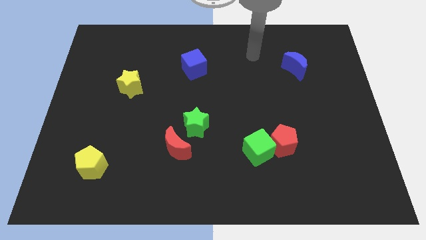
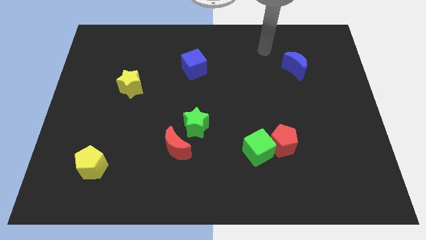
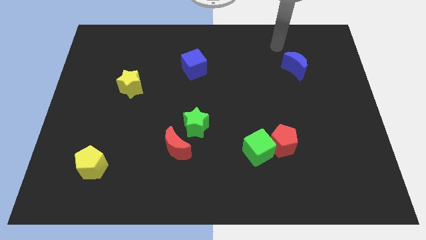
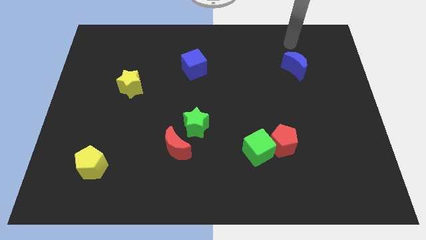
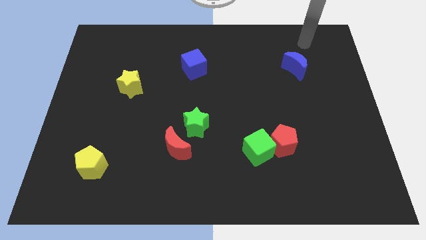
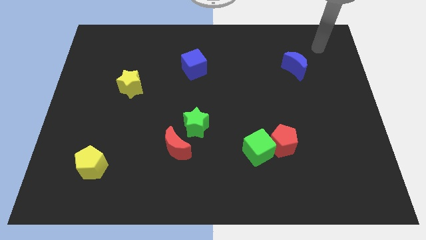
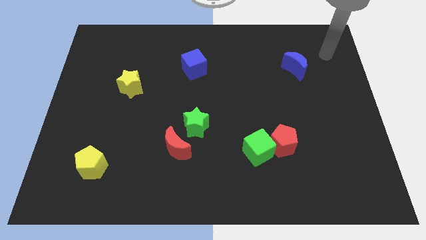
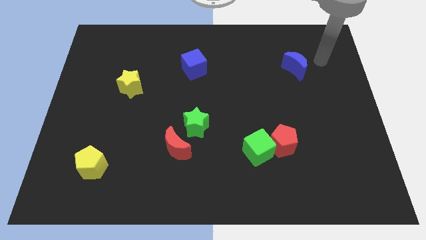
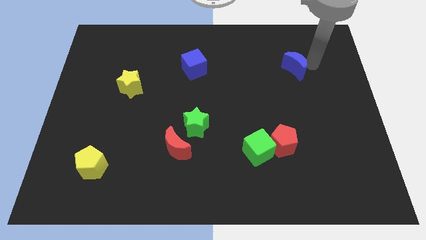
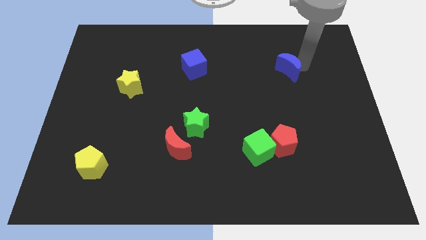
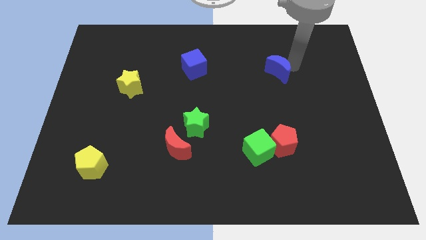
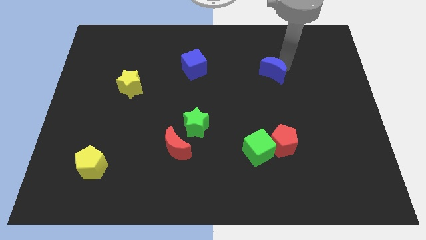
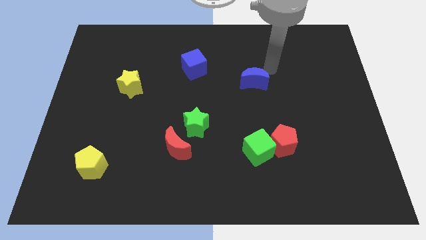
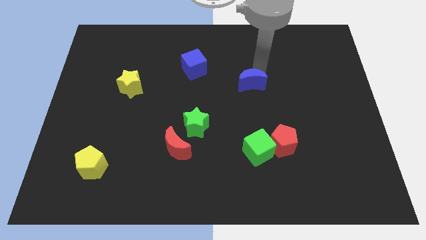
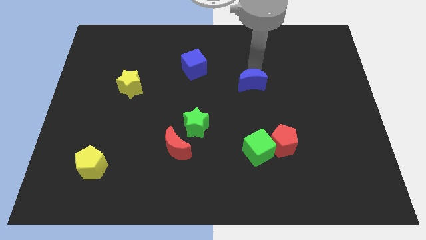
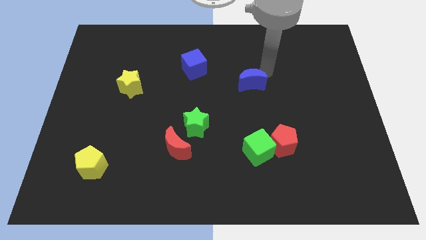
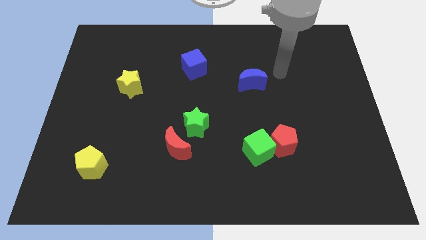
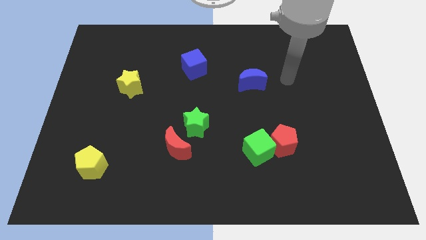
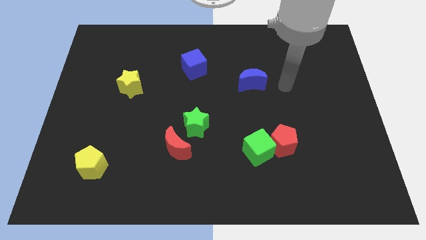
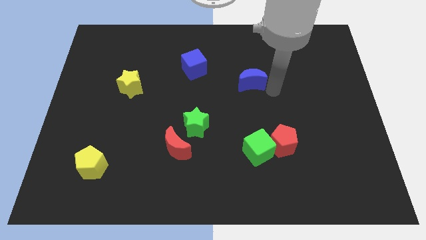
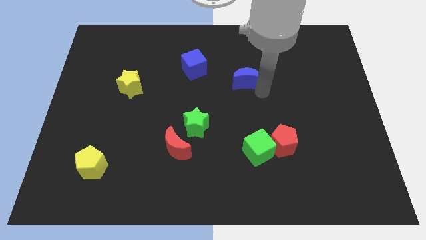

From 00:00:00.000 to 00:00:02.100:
move the blue crescent towards the right of blue cube

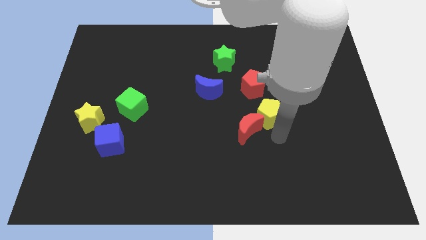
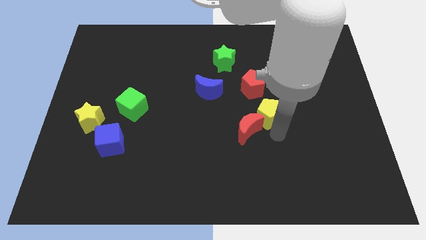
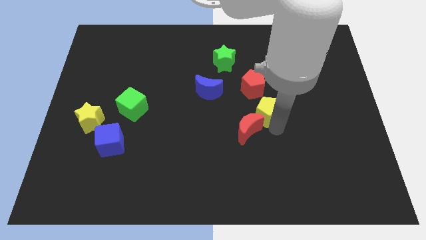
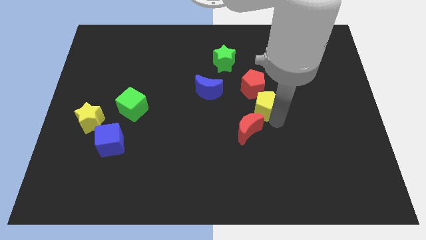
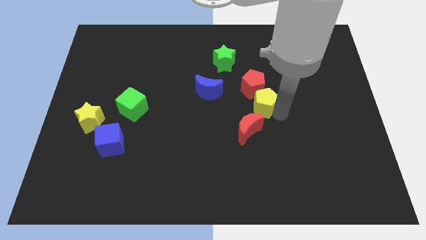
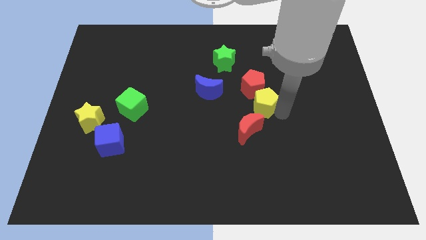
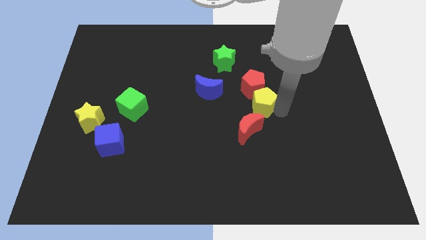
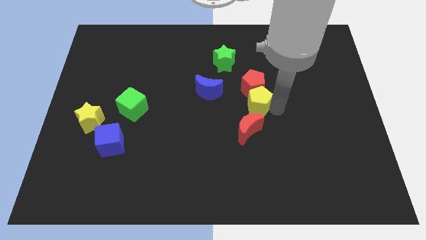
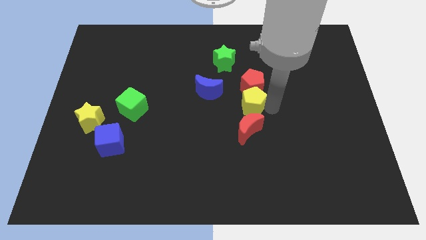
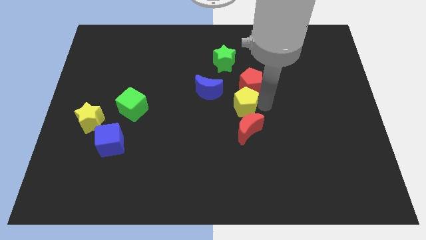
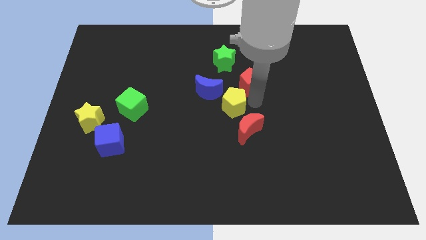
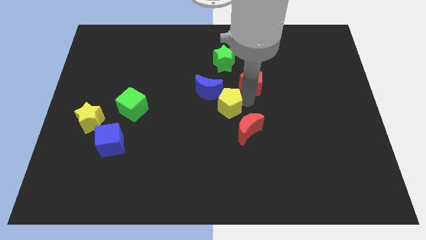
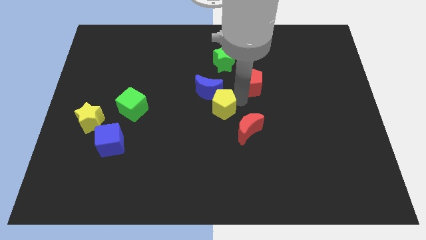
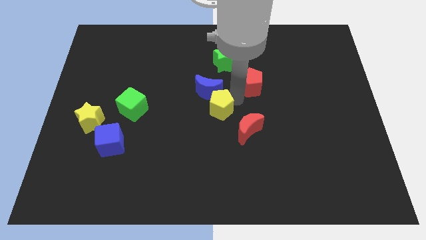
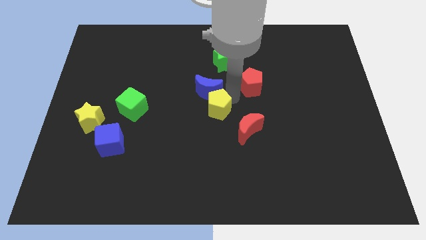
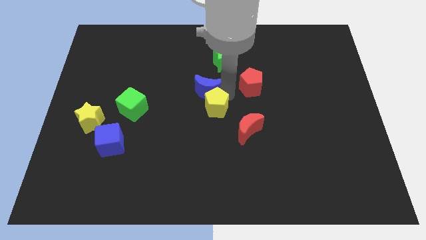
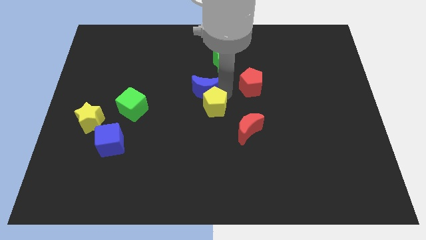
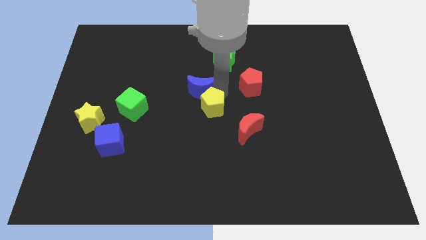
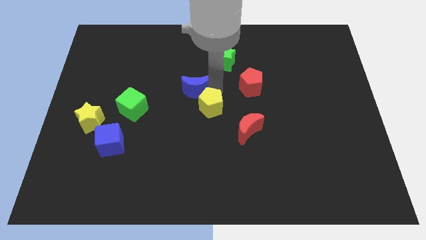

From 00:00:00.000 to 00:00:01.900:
move the yellow pentagon to the center

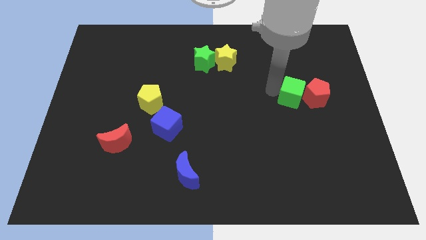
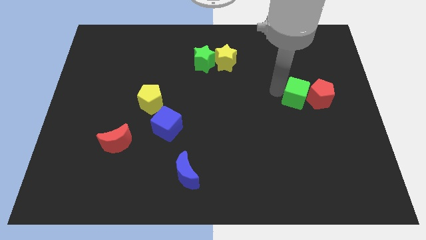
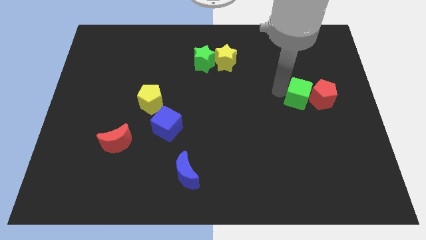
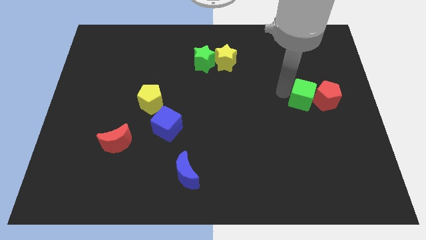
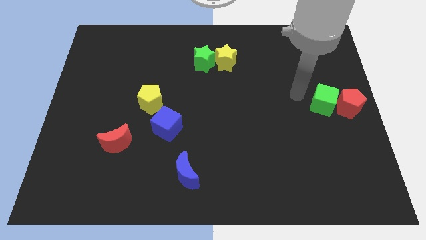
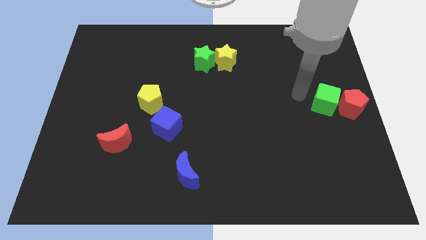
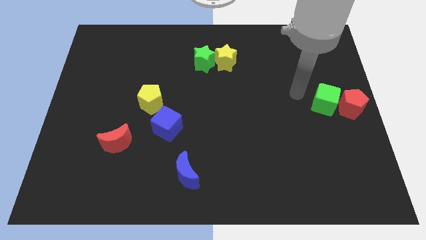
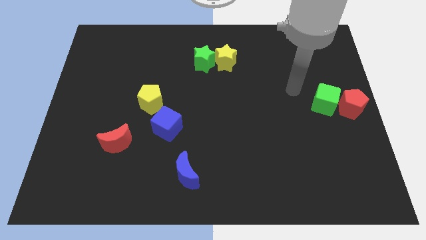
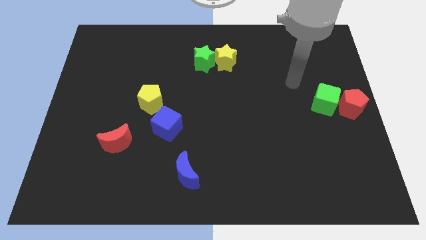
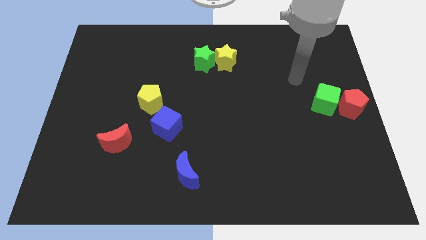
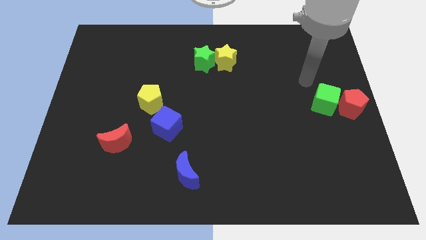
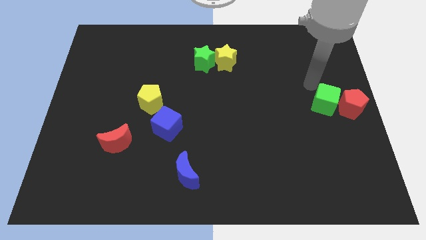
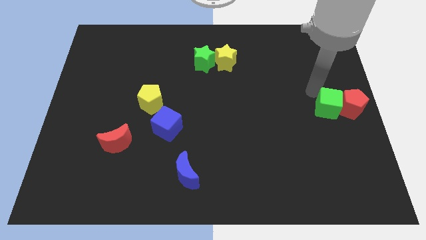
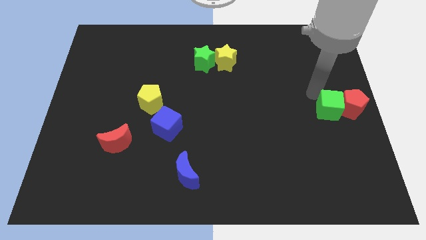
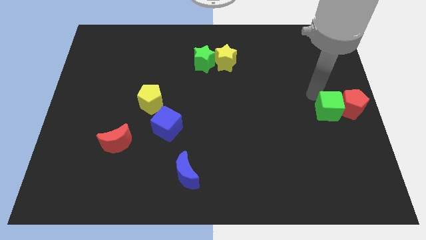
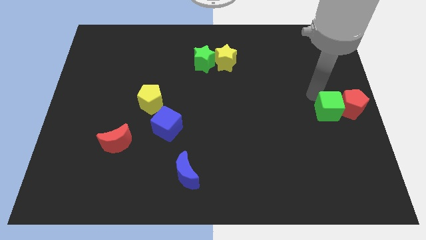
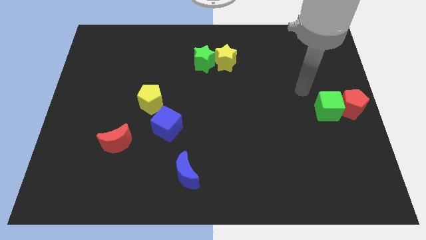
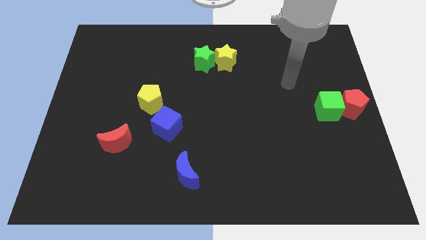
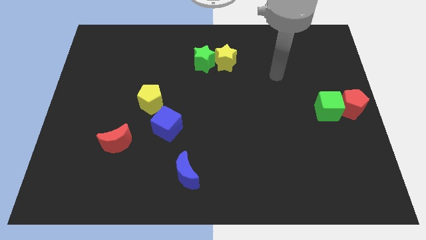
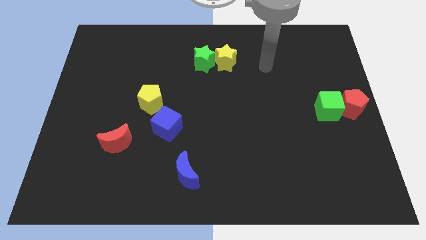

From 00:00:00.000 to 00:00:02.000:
move the green cube along with the red pentagon towards the center right

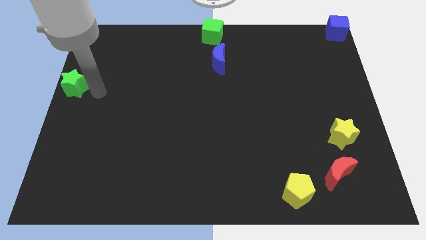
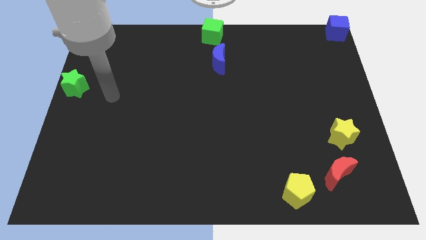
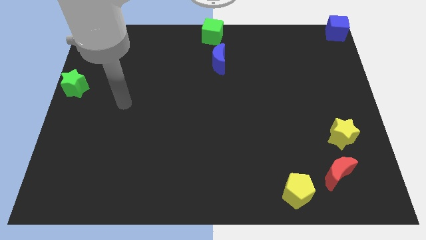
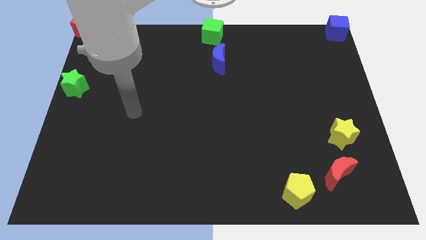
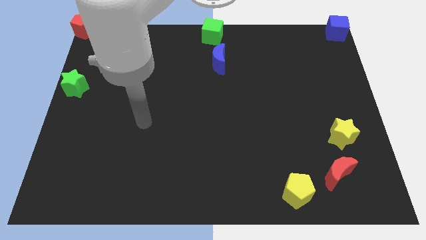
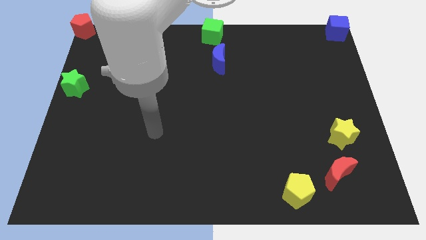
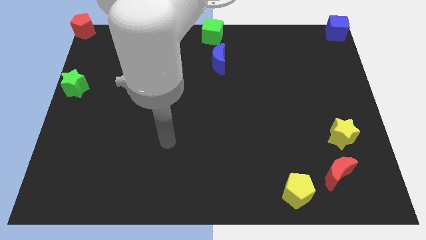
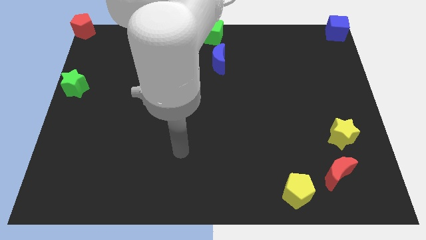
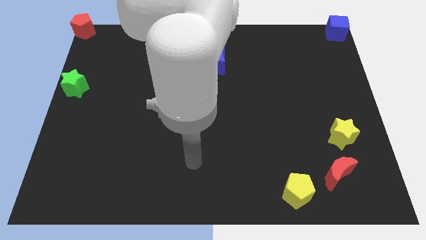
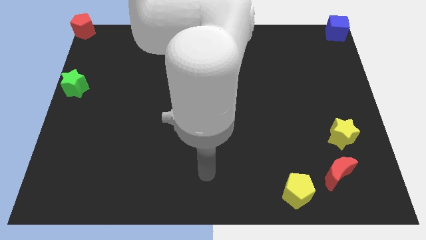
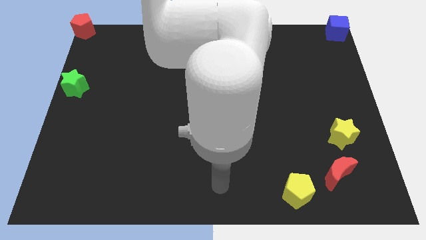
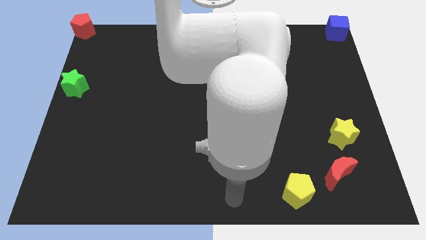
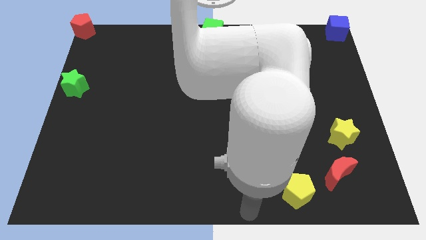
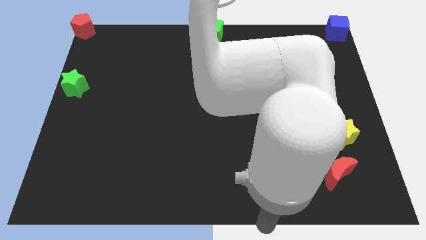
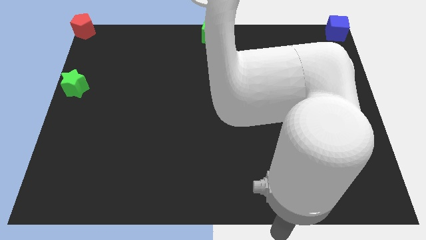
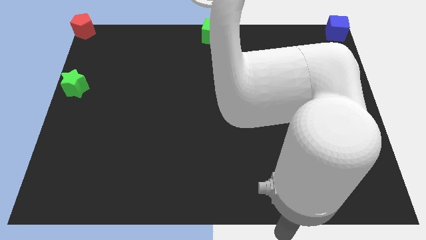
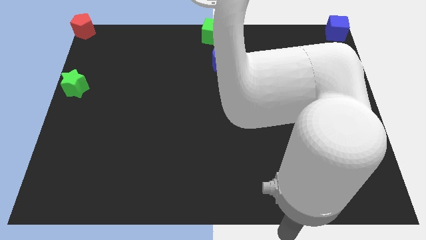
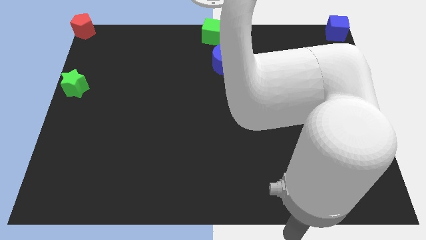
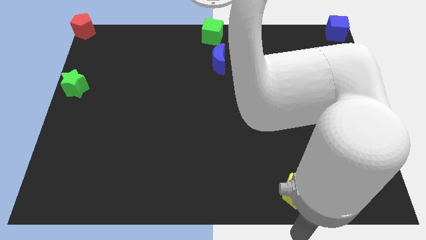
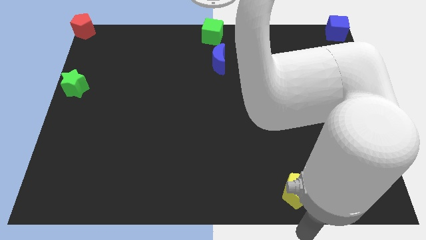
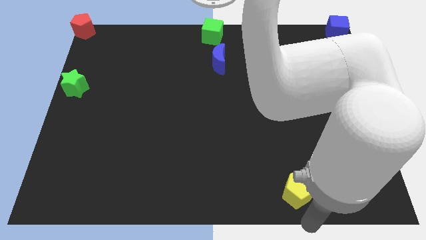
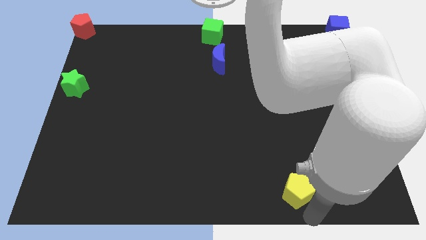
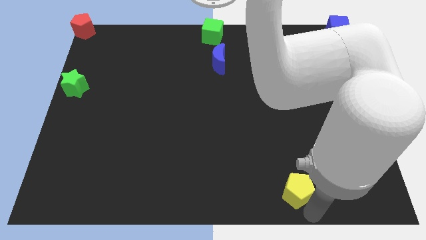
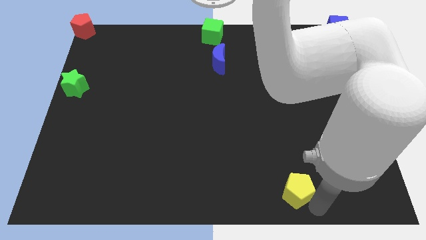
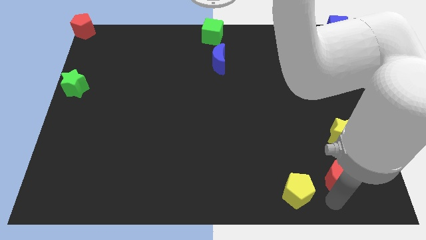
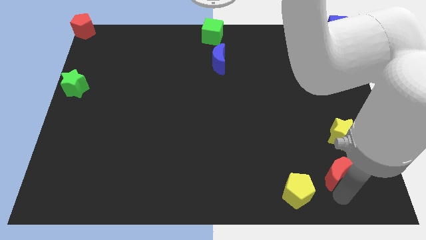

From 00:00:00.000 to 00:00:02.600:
move your arm away to the bottom of the red crescent

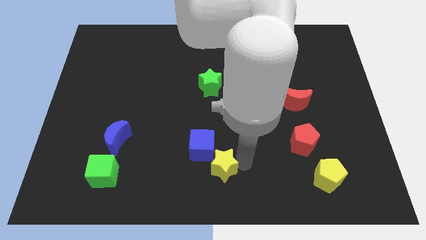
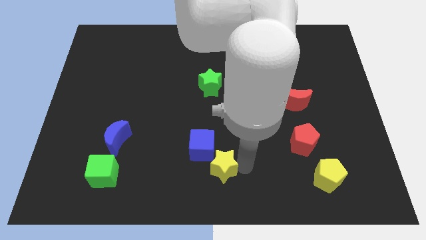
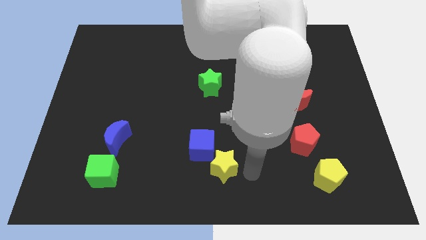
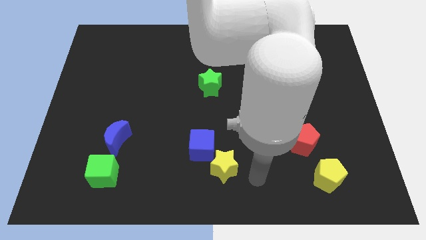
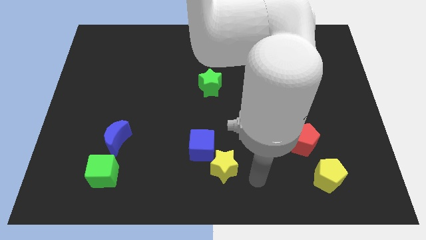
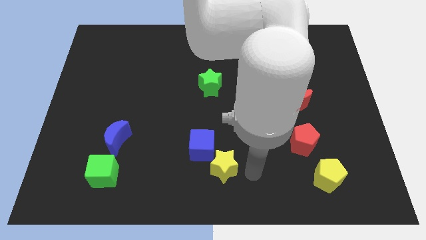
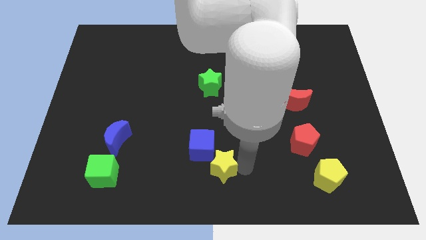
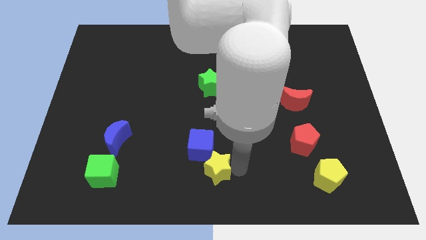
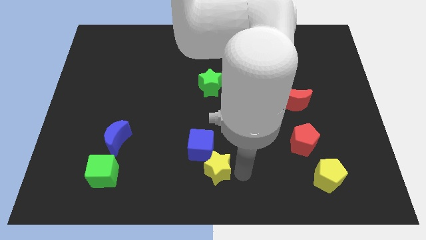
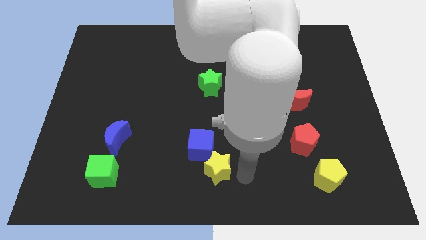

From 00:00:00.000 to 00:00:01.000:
slide the yellow star slightly to the left of the board
